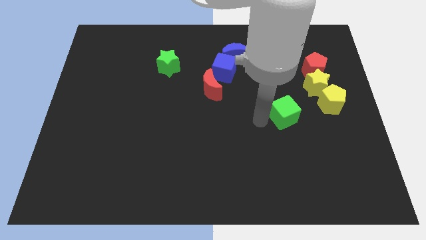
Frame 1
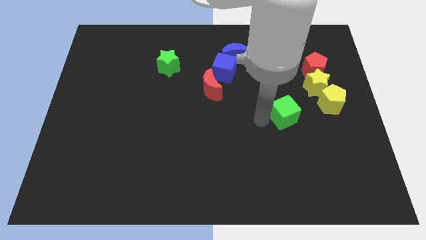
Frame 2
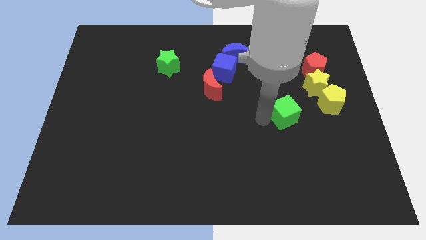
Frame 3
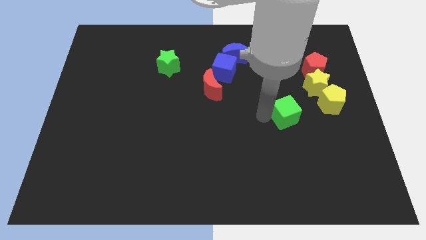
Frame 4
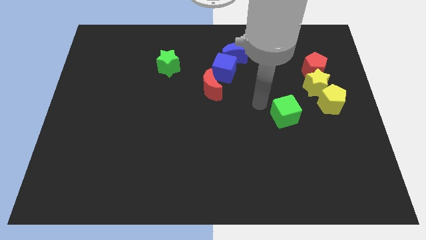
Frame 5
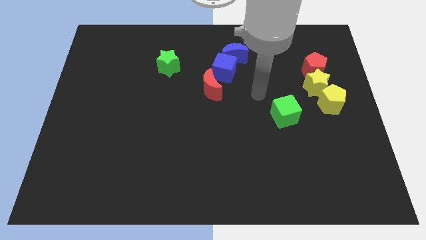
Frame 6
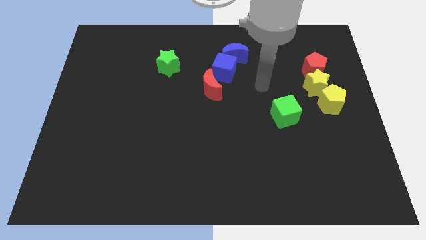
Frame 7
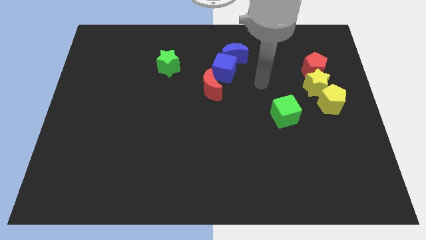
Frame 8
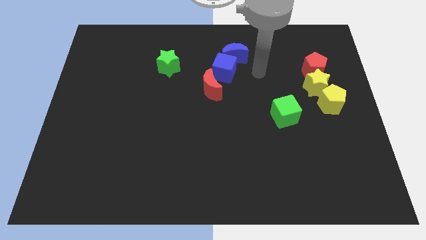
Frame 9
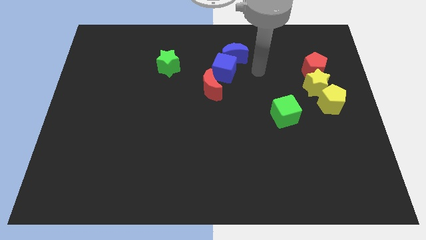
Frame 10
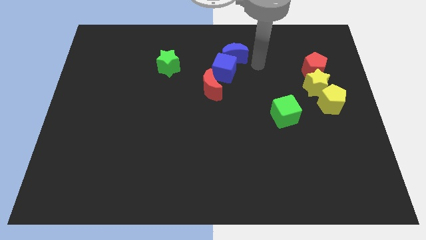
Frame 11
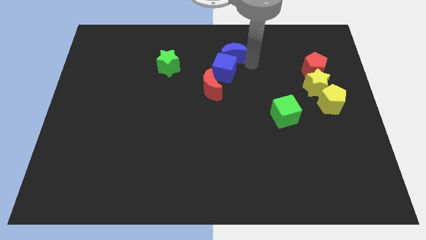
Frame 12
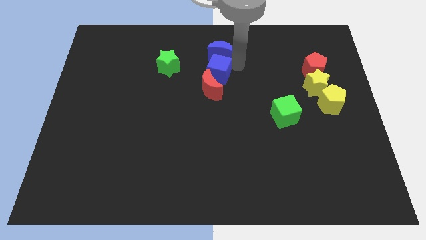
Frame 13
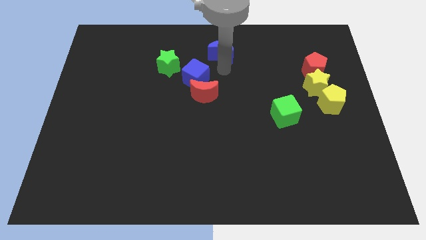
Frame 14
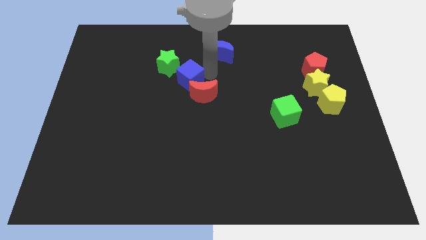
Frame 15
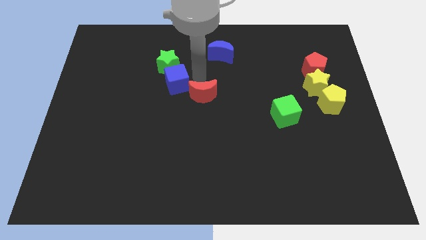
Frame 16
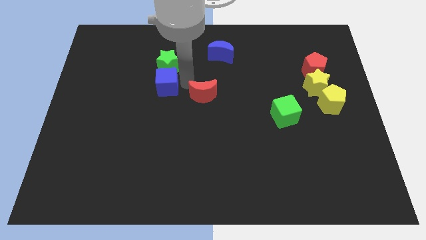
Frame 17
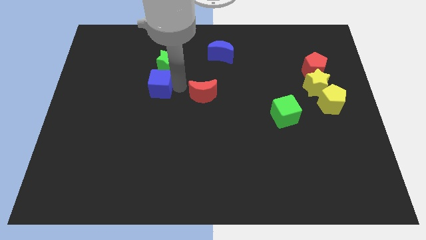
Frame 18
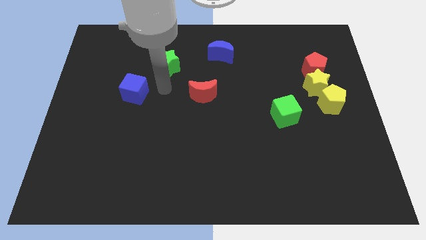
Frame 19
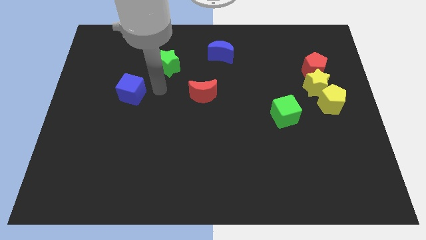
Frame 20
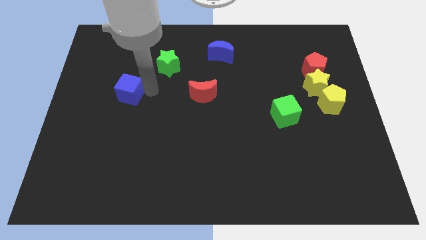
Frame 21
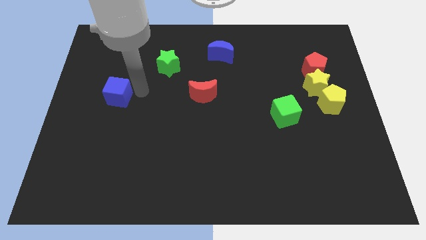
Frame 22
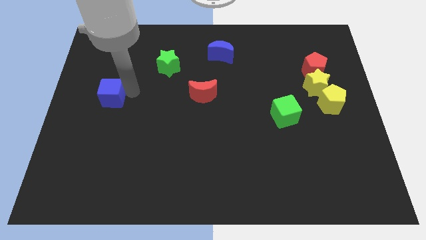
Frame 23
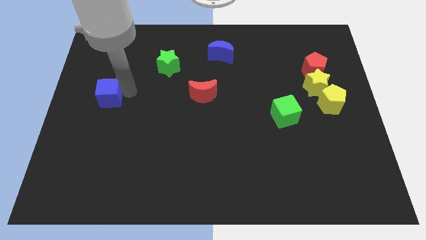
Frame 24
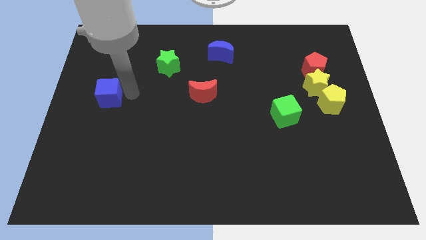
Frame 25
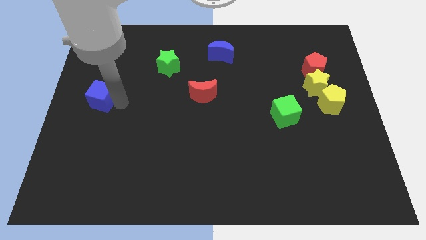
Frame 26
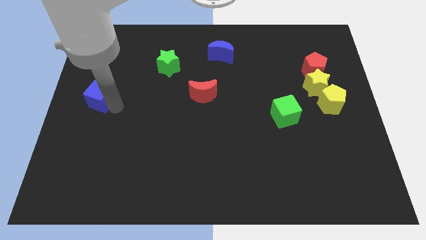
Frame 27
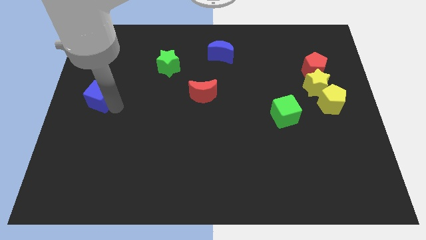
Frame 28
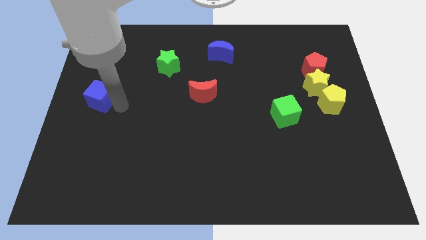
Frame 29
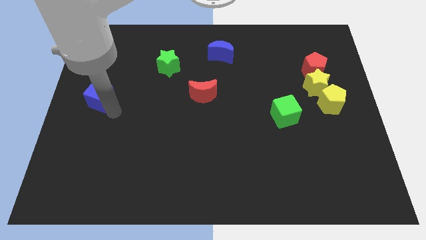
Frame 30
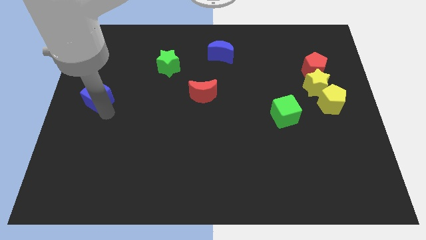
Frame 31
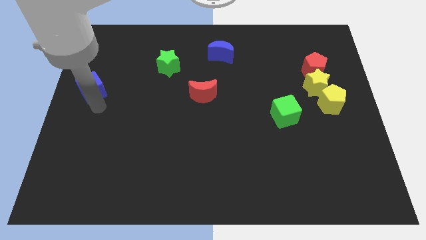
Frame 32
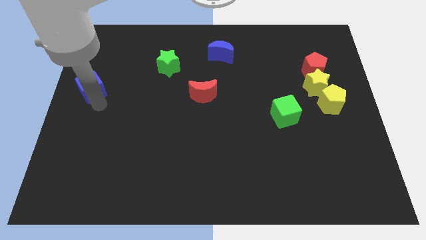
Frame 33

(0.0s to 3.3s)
place the blue cube left to the red moon

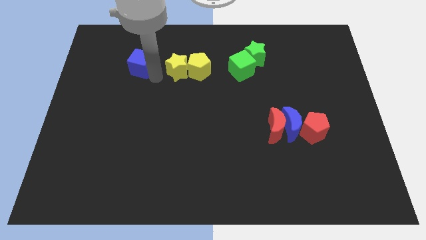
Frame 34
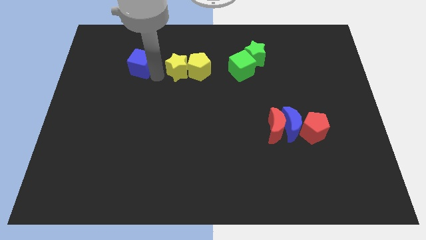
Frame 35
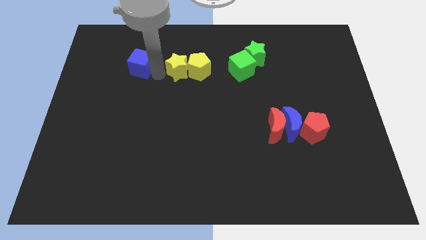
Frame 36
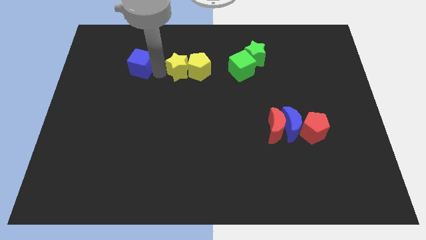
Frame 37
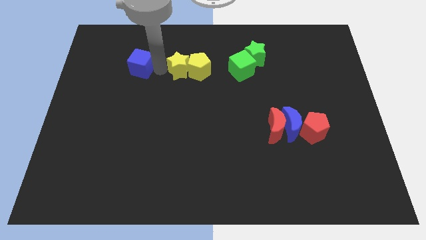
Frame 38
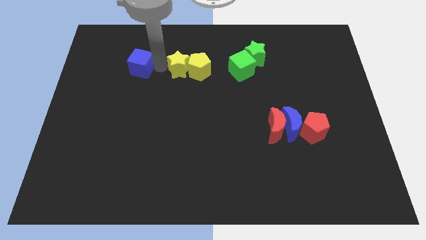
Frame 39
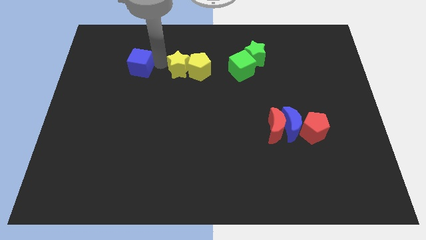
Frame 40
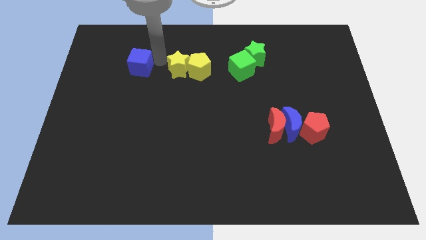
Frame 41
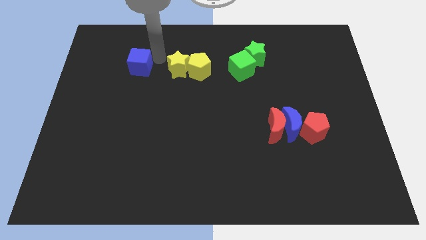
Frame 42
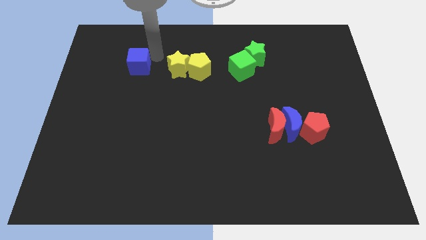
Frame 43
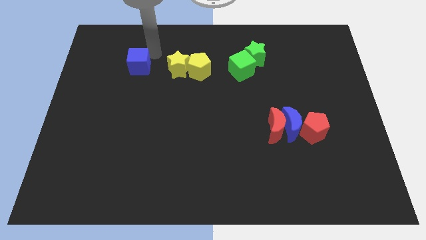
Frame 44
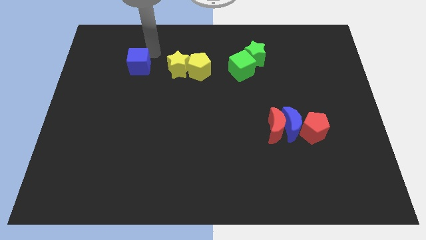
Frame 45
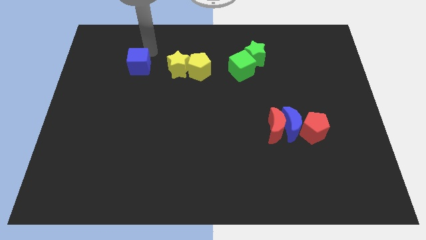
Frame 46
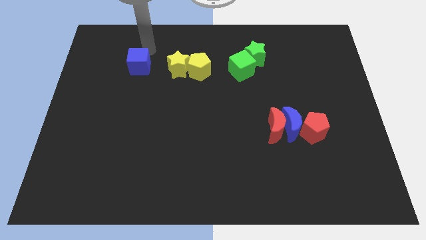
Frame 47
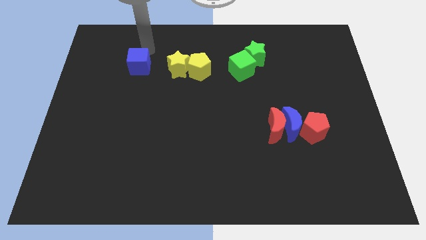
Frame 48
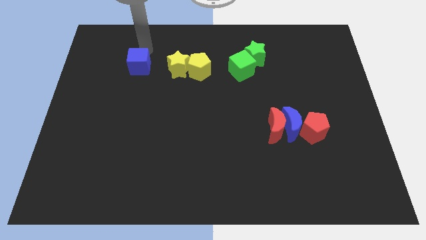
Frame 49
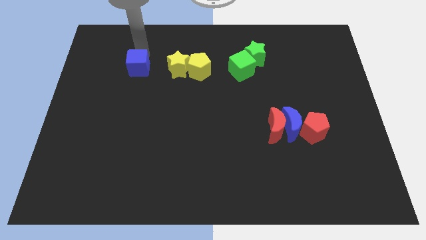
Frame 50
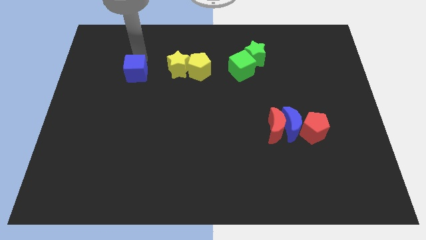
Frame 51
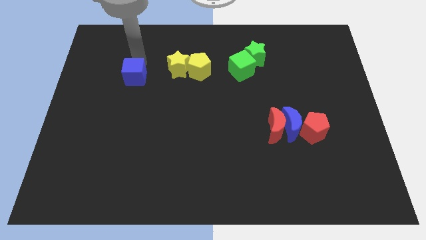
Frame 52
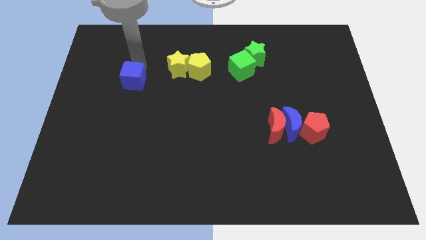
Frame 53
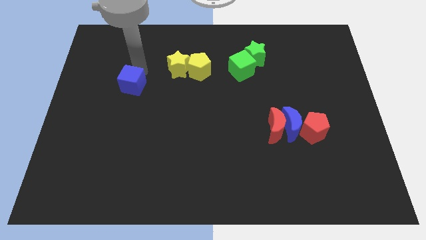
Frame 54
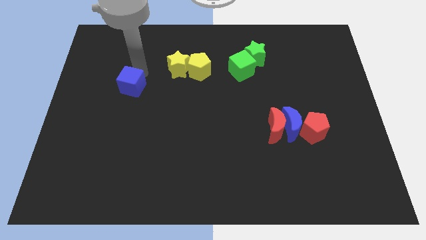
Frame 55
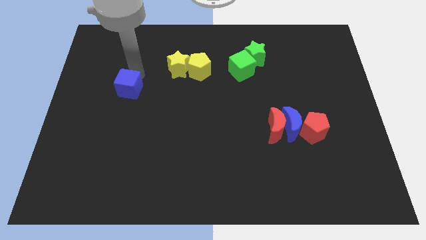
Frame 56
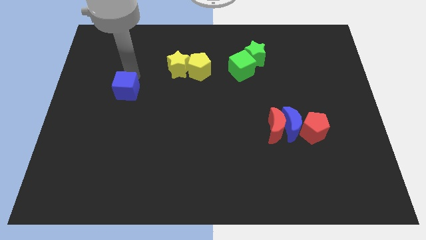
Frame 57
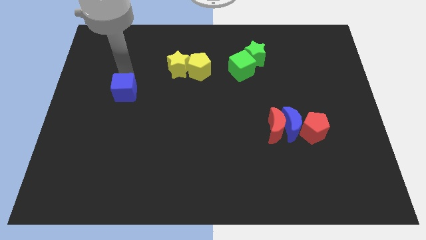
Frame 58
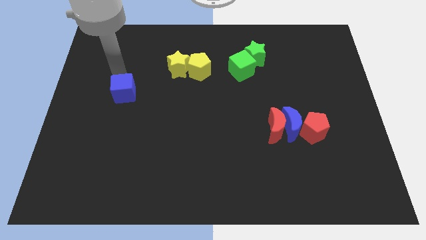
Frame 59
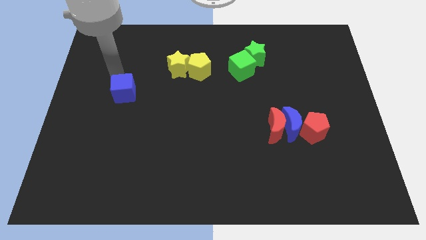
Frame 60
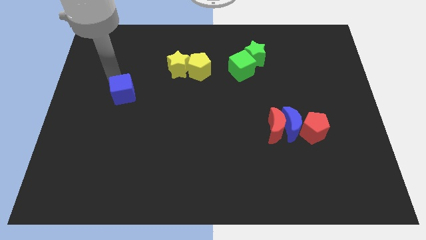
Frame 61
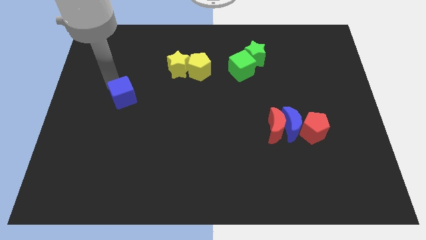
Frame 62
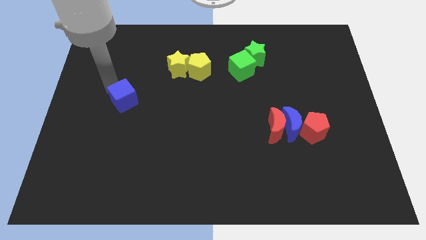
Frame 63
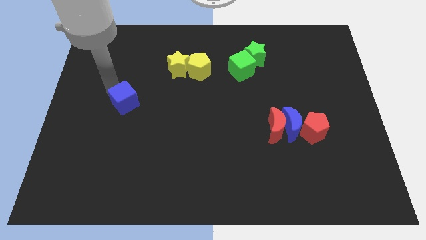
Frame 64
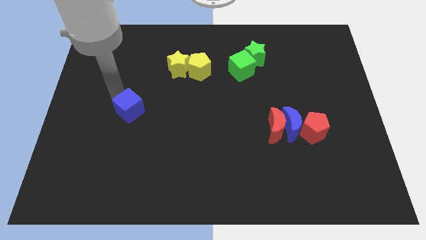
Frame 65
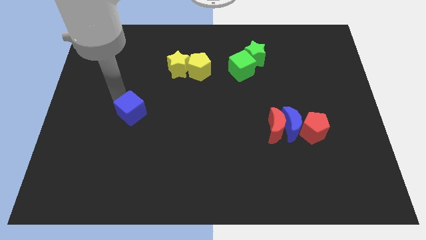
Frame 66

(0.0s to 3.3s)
push the blue cube slightly towards the bottom of the board

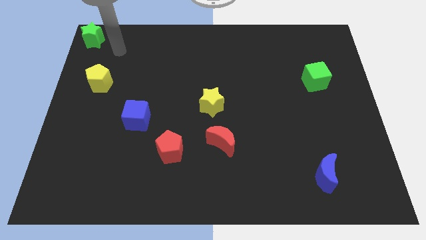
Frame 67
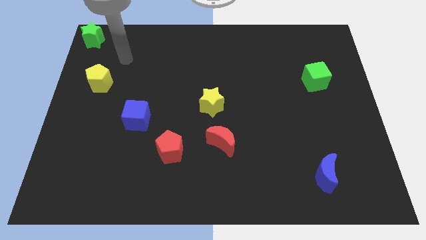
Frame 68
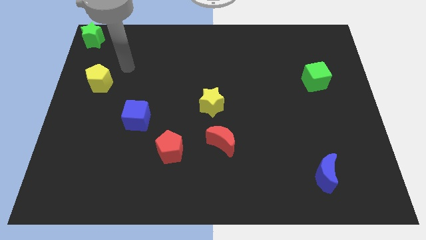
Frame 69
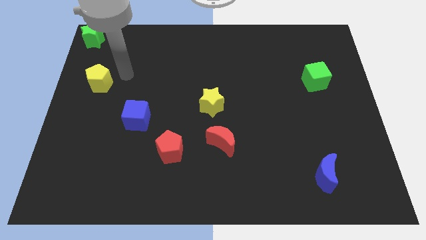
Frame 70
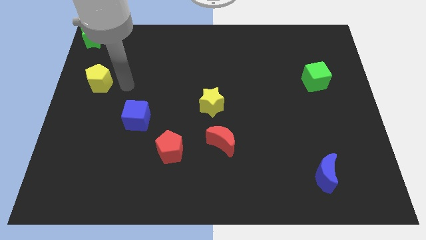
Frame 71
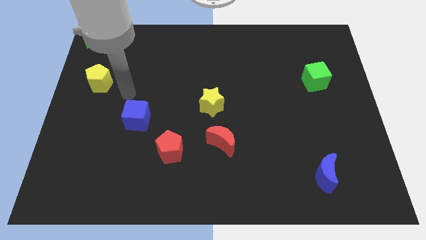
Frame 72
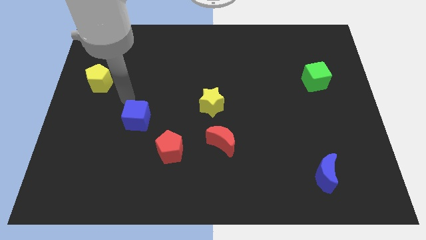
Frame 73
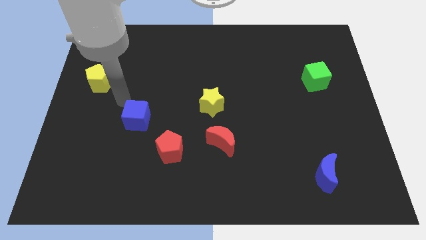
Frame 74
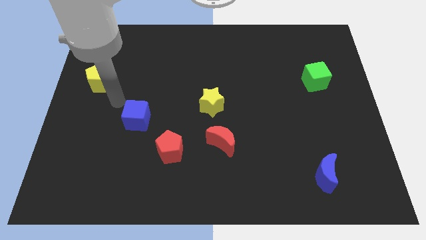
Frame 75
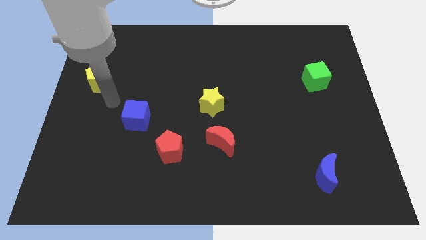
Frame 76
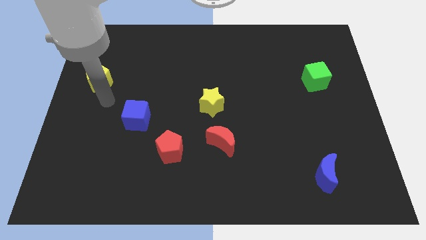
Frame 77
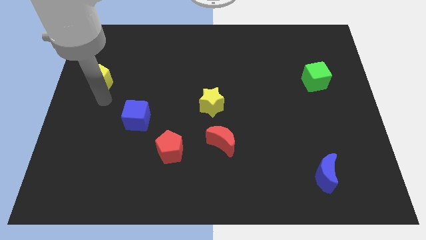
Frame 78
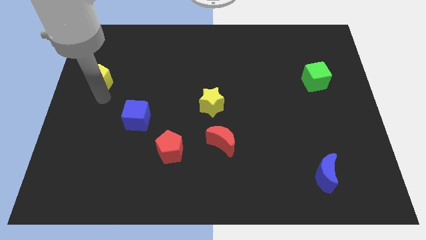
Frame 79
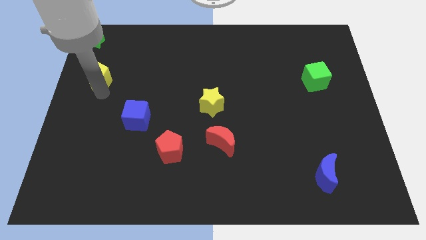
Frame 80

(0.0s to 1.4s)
move your arm towards yellow pentagon

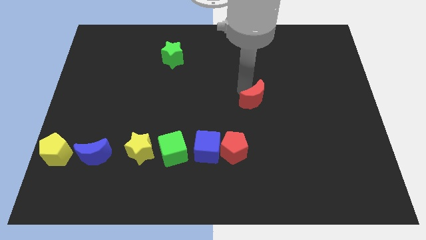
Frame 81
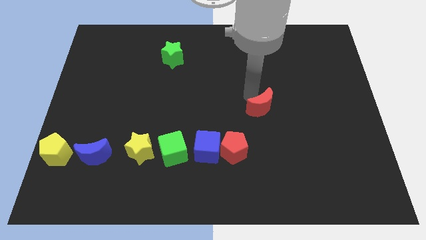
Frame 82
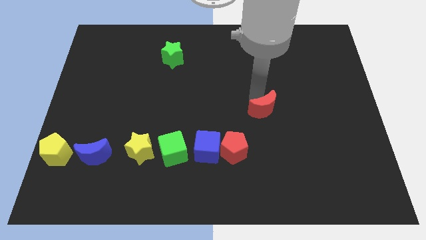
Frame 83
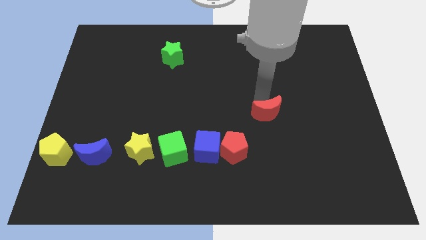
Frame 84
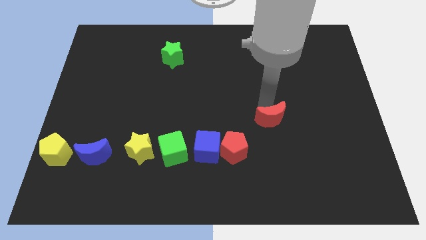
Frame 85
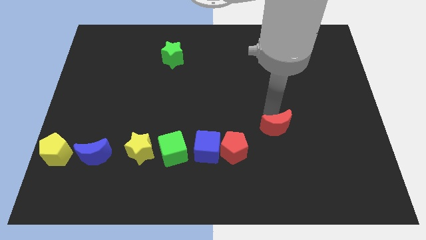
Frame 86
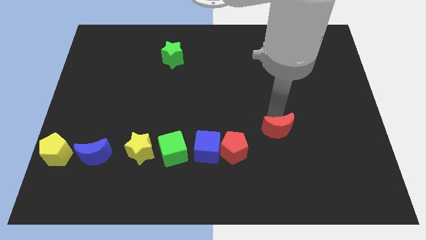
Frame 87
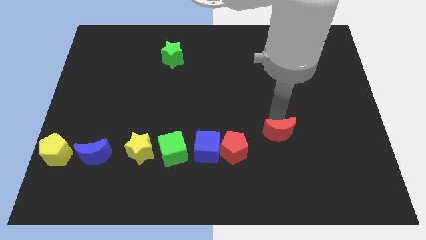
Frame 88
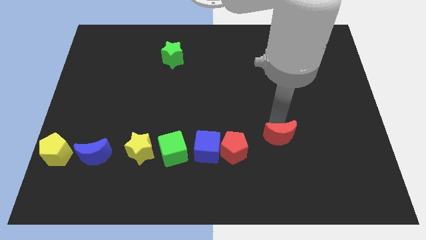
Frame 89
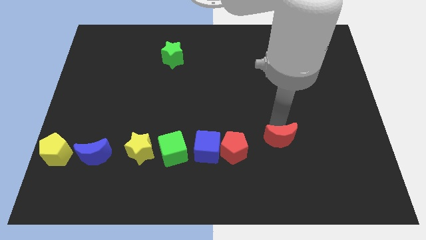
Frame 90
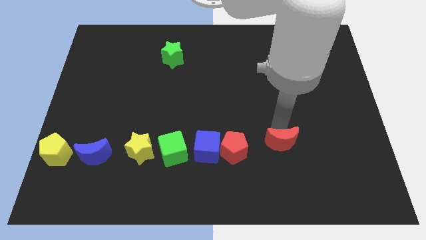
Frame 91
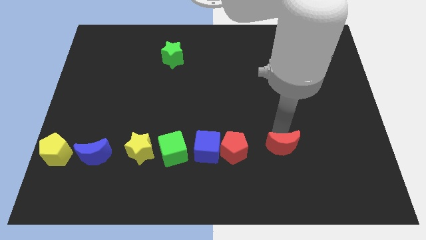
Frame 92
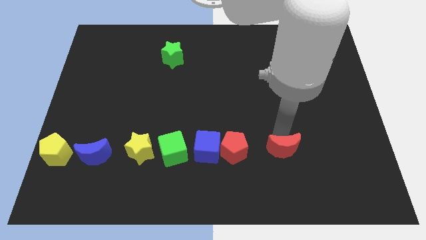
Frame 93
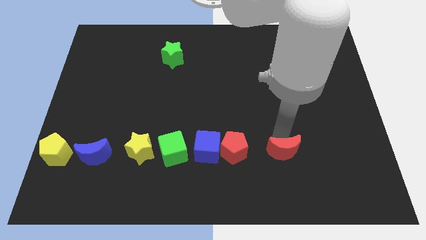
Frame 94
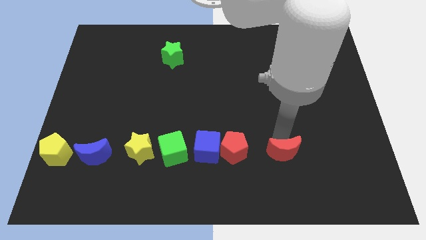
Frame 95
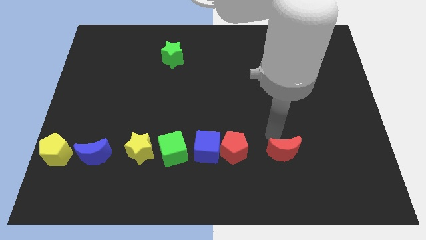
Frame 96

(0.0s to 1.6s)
place the red moon to the right of the red pentagon
